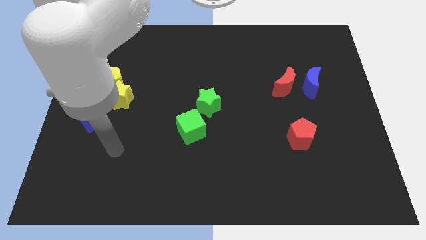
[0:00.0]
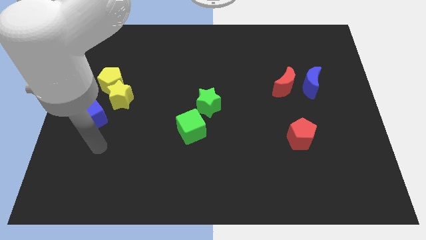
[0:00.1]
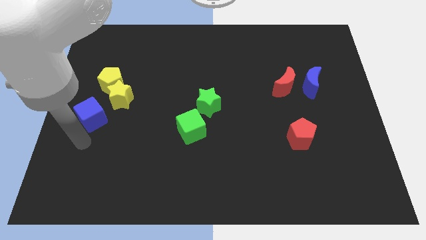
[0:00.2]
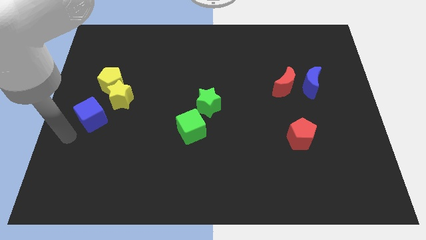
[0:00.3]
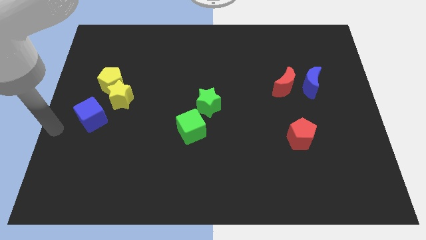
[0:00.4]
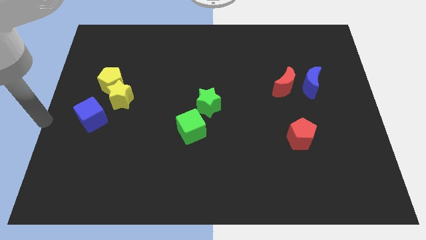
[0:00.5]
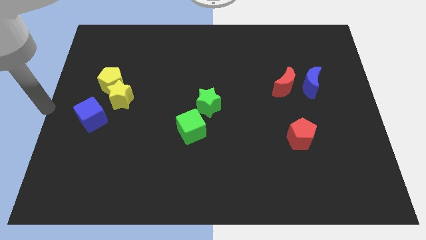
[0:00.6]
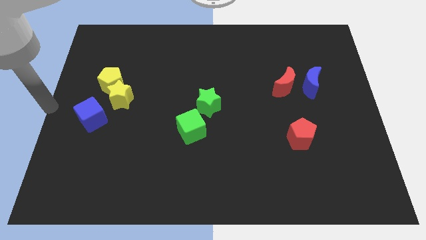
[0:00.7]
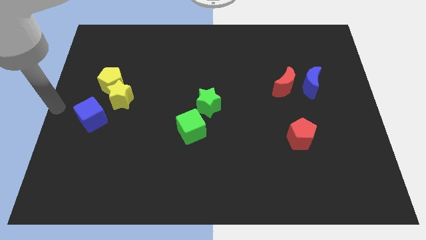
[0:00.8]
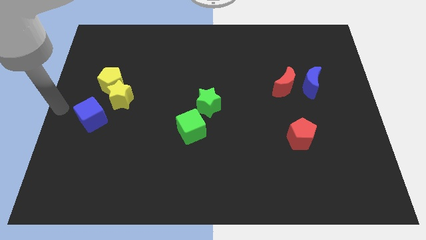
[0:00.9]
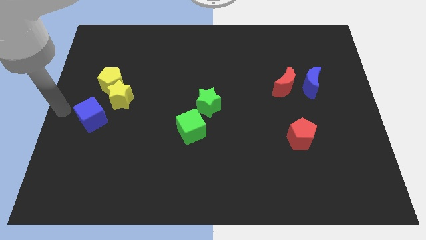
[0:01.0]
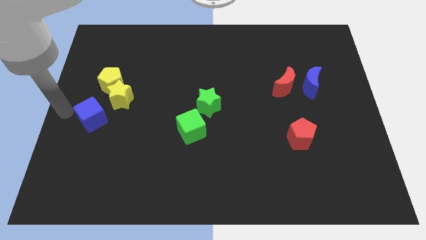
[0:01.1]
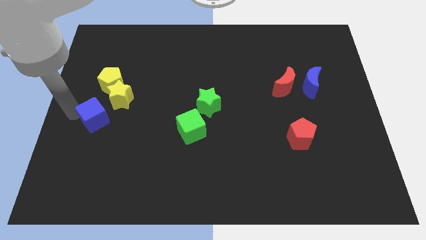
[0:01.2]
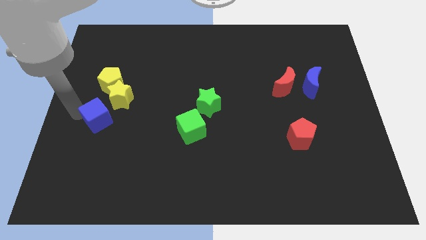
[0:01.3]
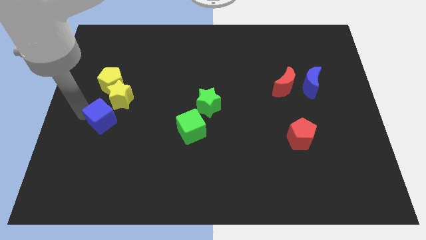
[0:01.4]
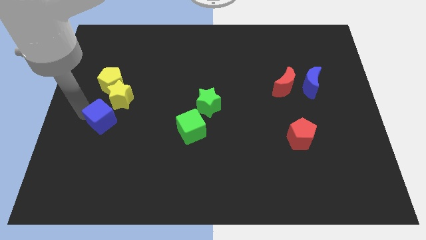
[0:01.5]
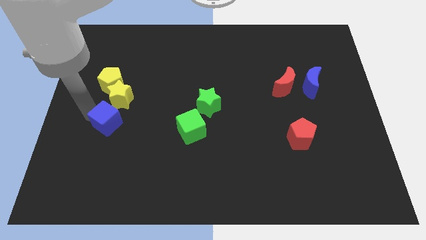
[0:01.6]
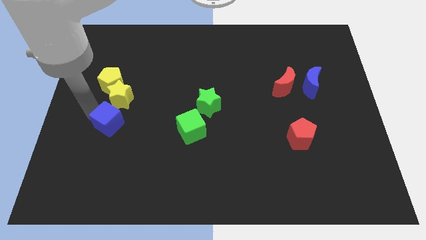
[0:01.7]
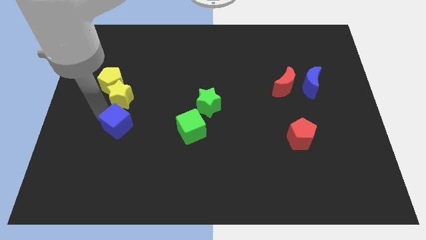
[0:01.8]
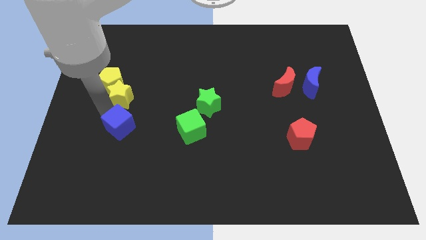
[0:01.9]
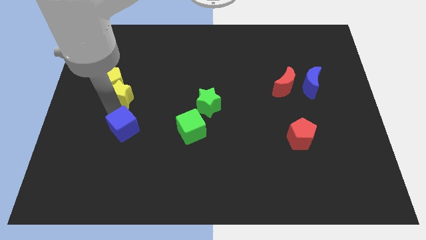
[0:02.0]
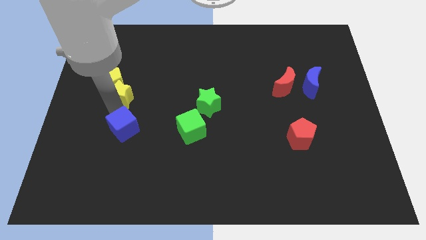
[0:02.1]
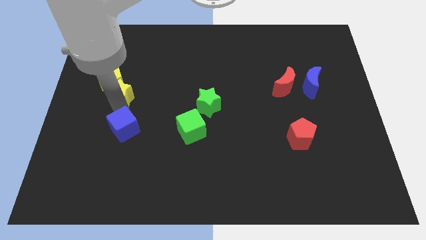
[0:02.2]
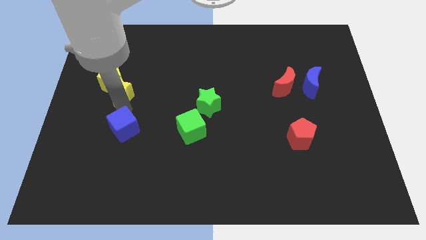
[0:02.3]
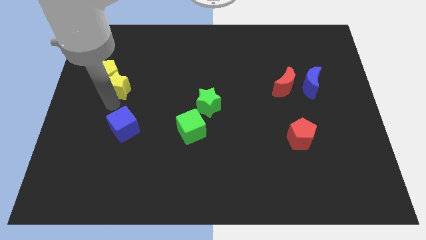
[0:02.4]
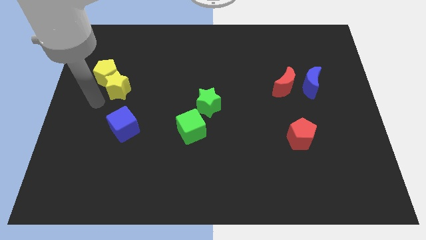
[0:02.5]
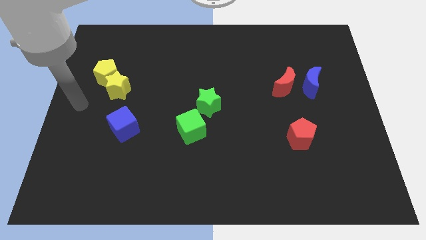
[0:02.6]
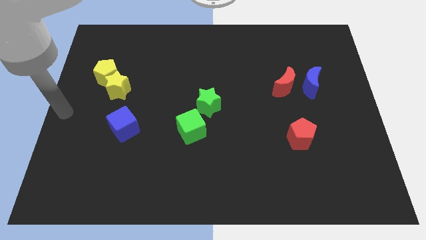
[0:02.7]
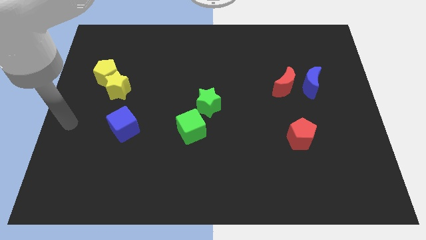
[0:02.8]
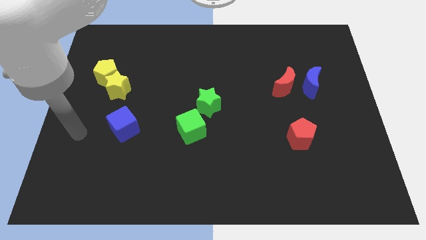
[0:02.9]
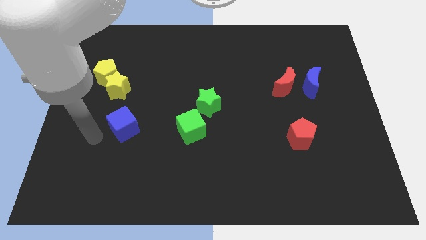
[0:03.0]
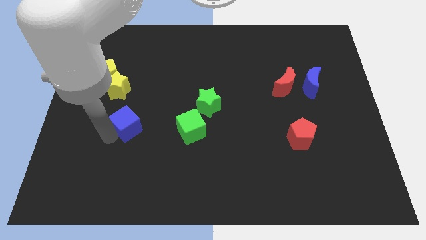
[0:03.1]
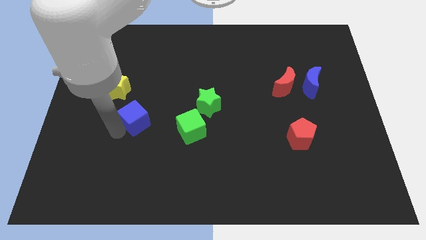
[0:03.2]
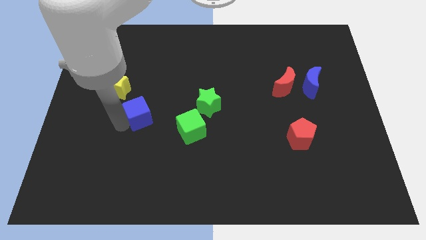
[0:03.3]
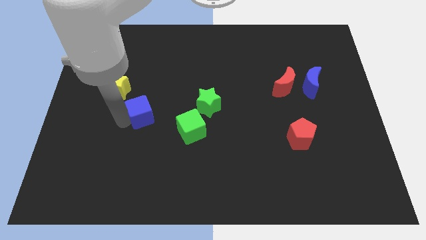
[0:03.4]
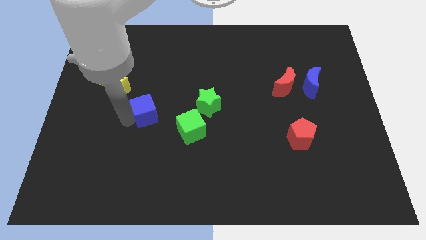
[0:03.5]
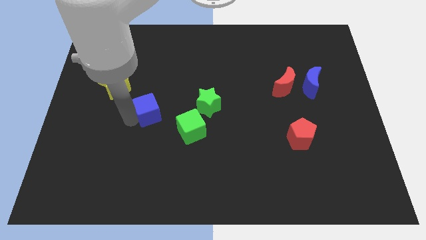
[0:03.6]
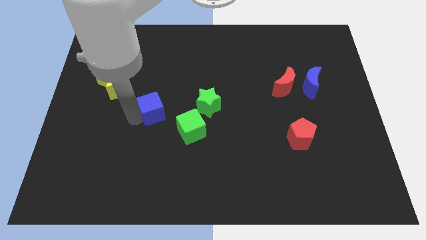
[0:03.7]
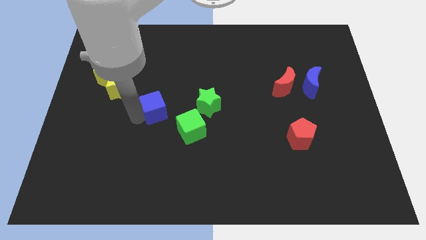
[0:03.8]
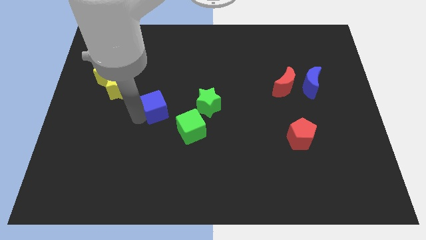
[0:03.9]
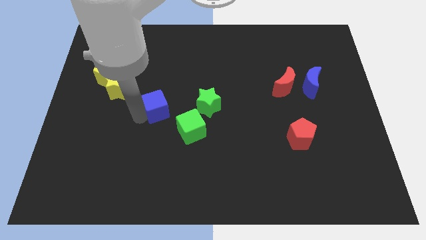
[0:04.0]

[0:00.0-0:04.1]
place the blue cube to the left of the green star

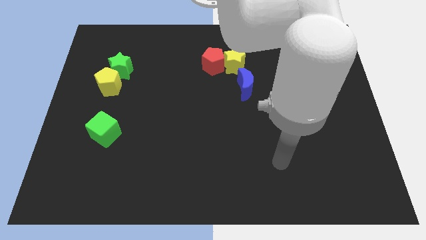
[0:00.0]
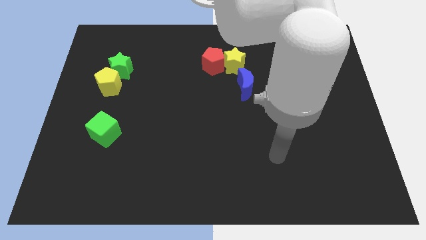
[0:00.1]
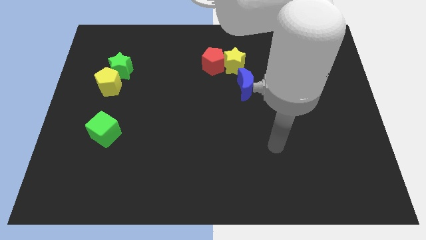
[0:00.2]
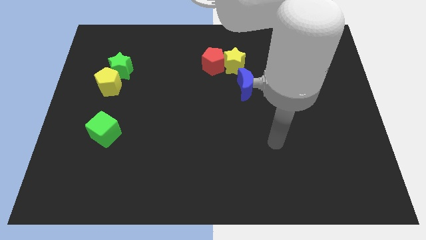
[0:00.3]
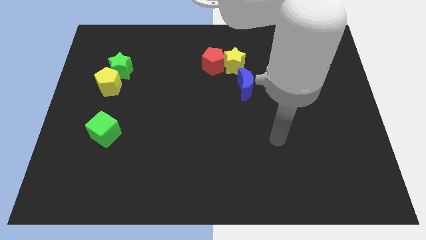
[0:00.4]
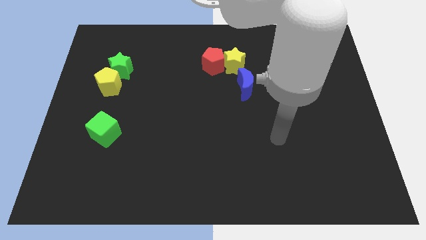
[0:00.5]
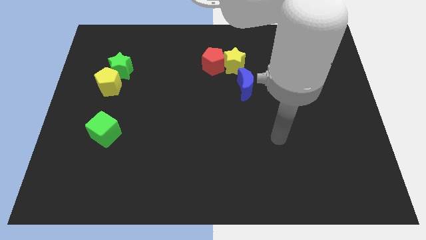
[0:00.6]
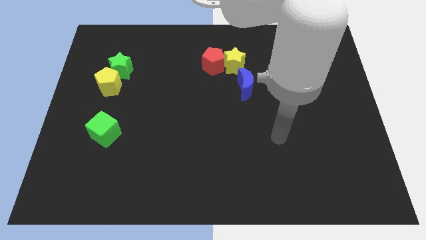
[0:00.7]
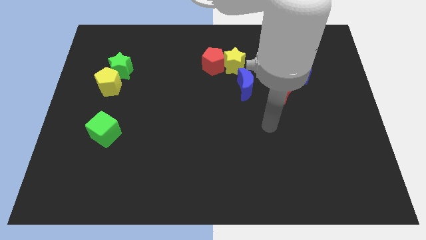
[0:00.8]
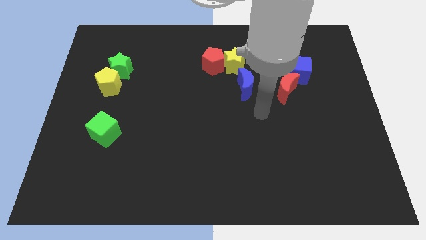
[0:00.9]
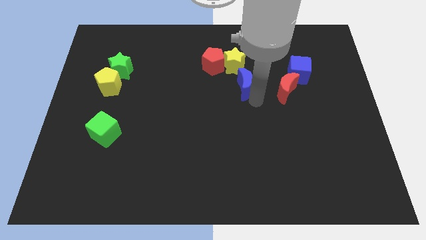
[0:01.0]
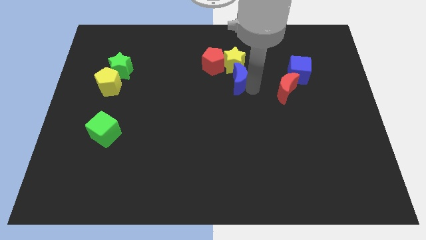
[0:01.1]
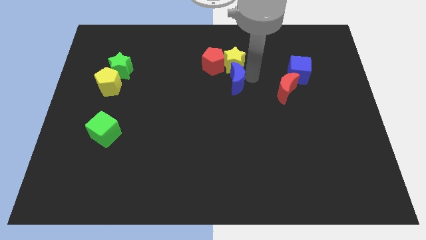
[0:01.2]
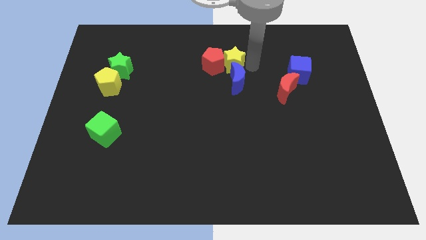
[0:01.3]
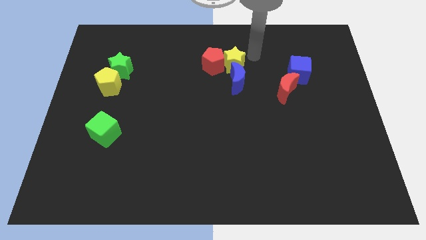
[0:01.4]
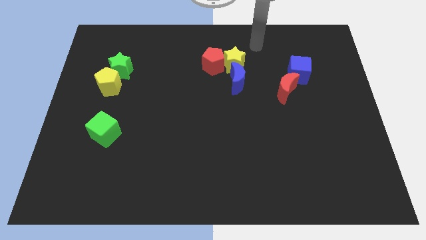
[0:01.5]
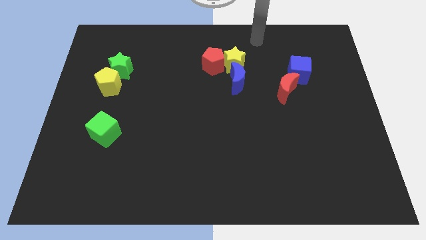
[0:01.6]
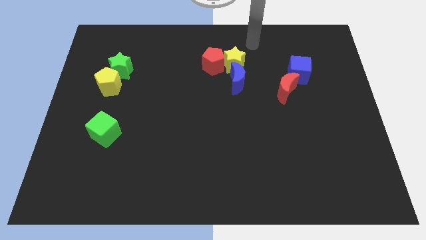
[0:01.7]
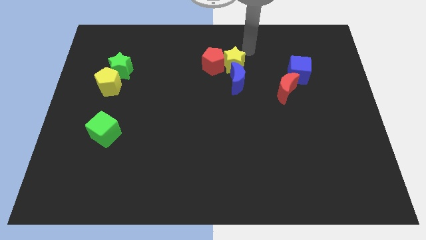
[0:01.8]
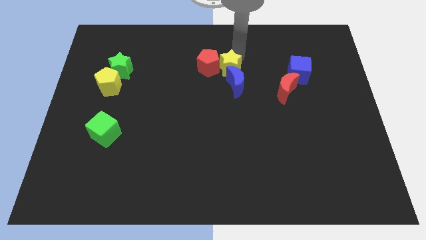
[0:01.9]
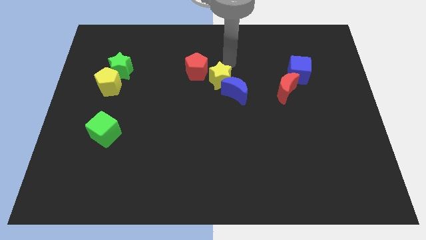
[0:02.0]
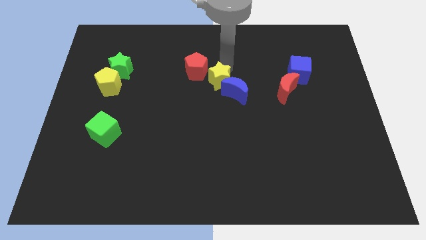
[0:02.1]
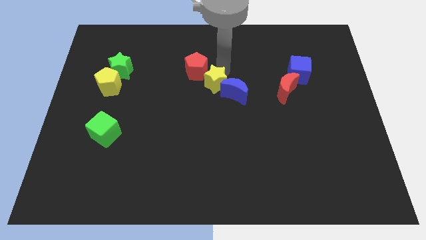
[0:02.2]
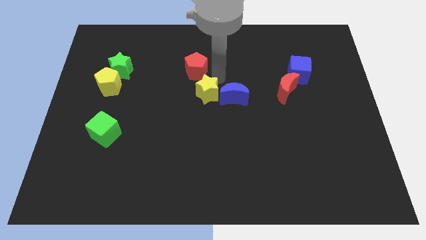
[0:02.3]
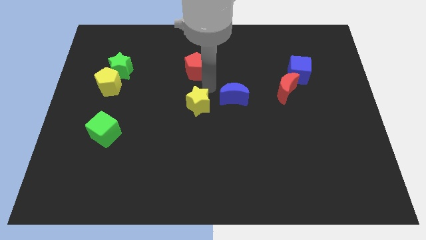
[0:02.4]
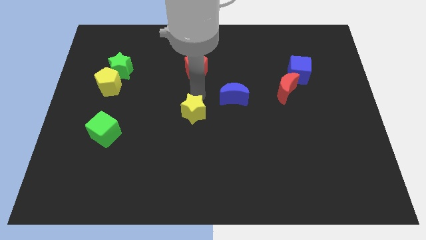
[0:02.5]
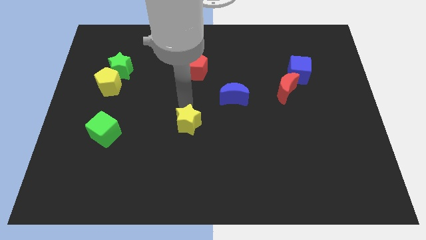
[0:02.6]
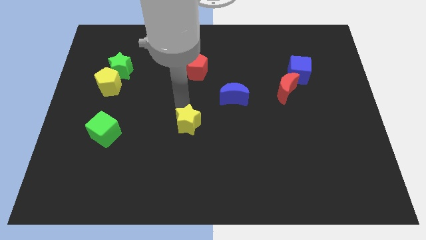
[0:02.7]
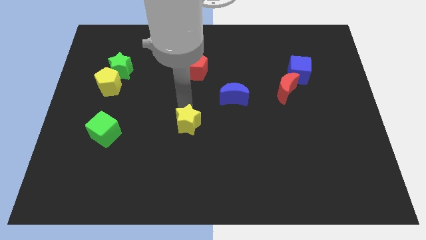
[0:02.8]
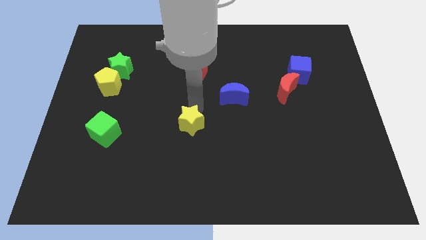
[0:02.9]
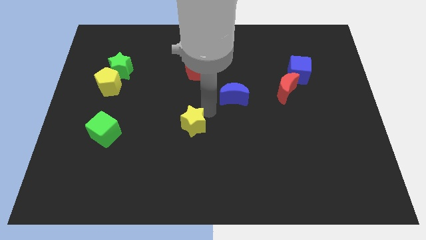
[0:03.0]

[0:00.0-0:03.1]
separate the yellow star from the blue moon and red pentagon

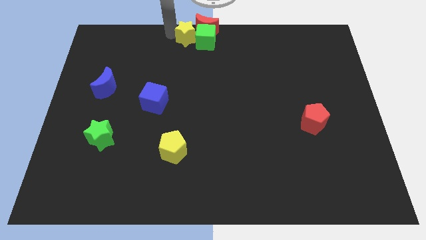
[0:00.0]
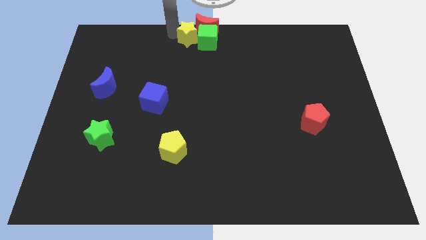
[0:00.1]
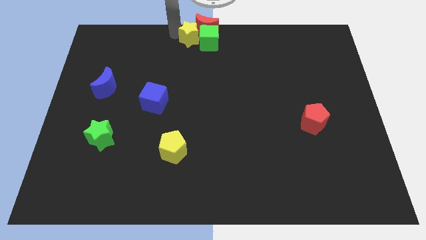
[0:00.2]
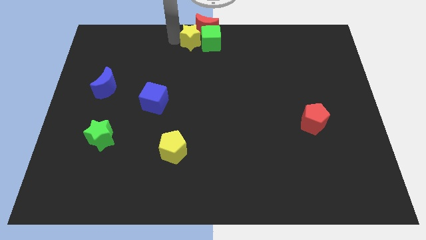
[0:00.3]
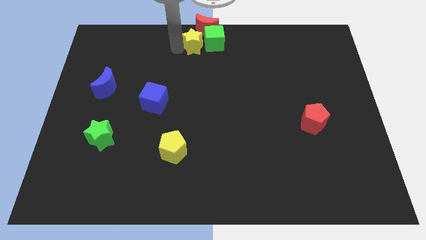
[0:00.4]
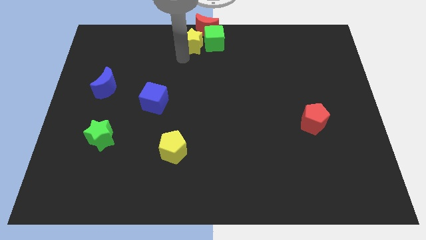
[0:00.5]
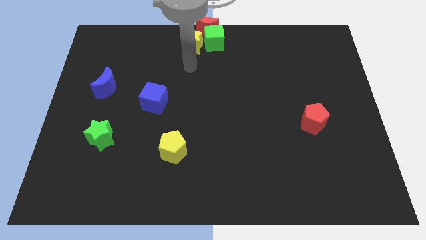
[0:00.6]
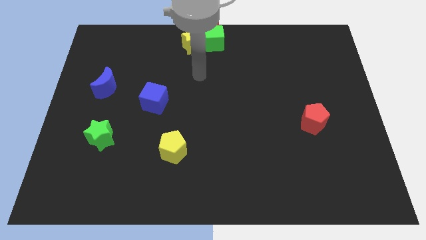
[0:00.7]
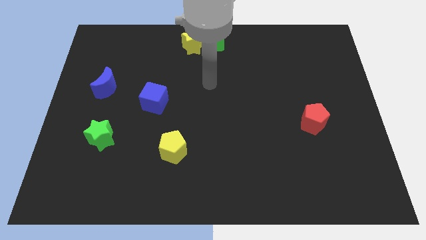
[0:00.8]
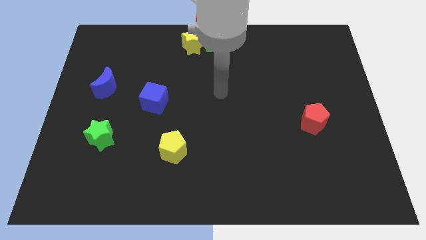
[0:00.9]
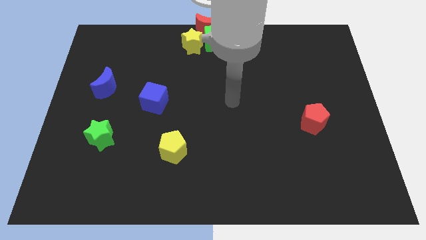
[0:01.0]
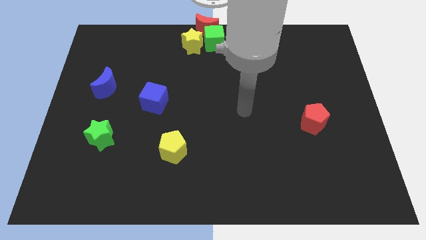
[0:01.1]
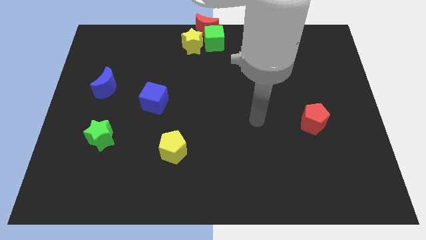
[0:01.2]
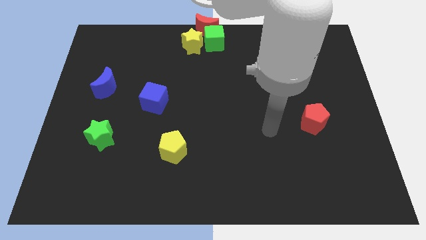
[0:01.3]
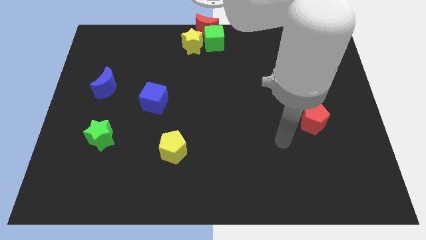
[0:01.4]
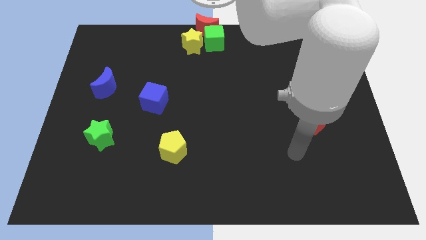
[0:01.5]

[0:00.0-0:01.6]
move your arm to the bottom right of the board
